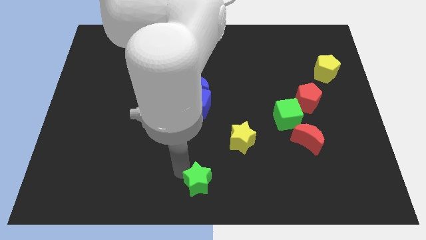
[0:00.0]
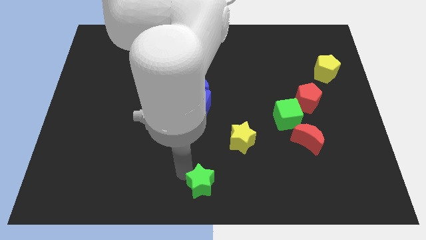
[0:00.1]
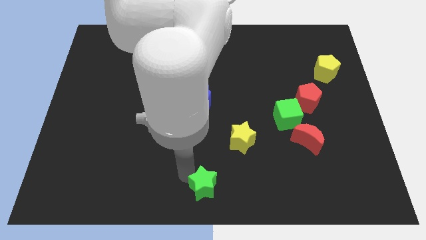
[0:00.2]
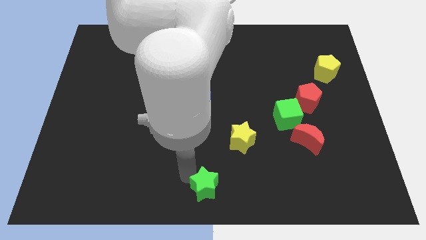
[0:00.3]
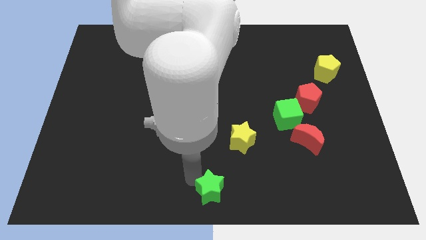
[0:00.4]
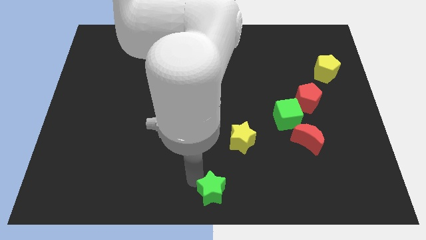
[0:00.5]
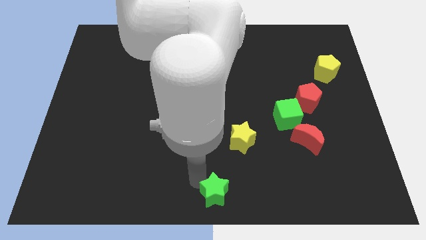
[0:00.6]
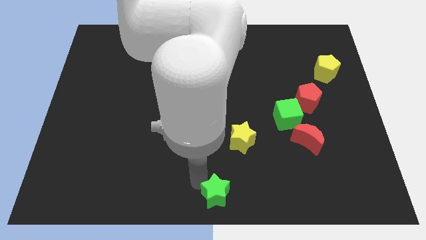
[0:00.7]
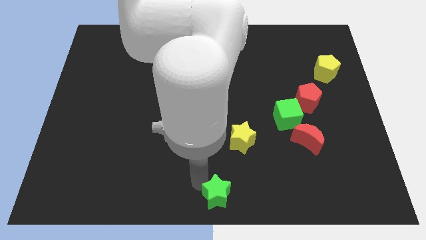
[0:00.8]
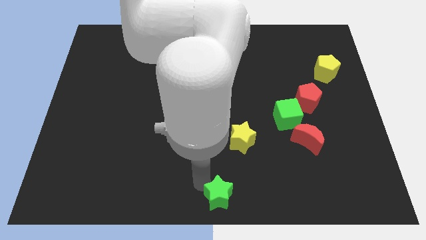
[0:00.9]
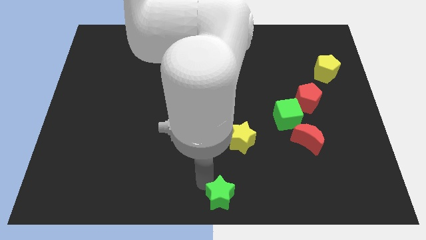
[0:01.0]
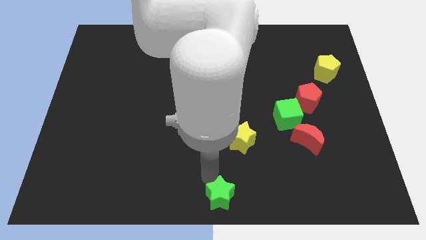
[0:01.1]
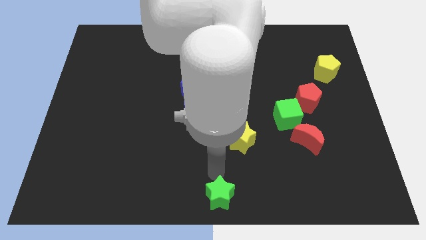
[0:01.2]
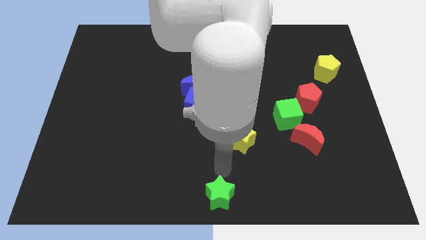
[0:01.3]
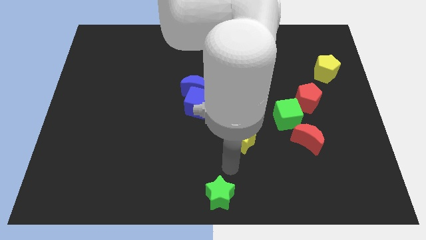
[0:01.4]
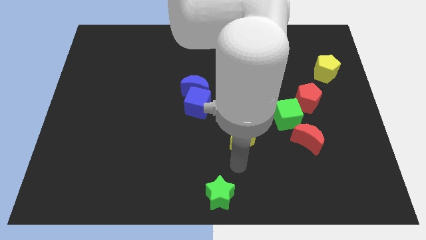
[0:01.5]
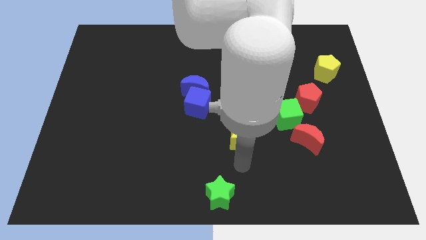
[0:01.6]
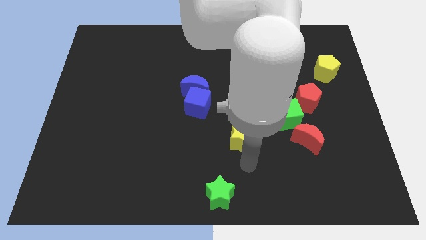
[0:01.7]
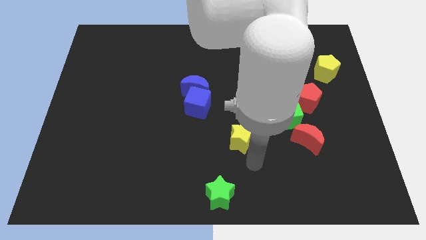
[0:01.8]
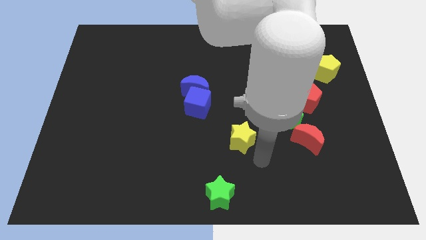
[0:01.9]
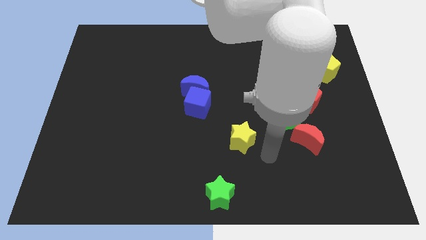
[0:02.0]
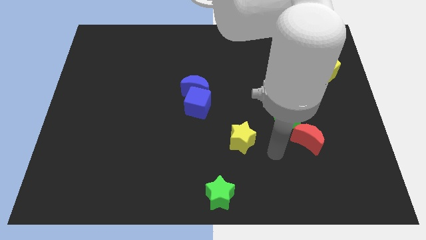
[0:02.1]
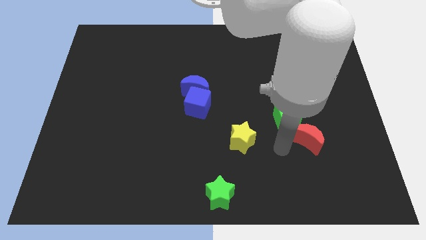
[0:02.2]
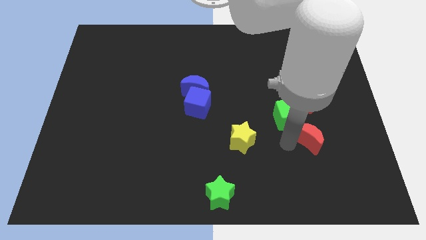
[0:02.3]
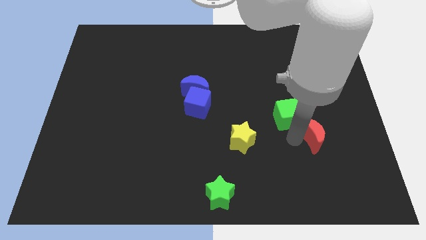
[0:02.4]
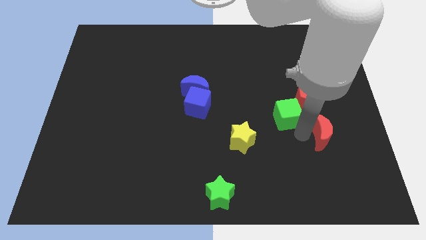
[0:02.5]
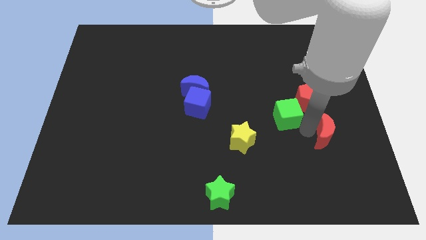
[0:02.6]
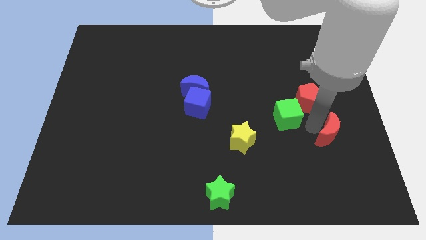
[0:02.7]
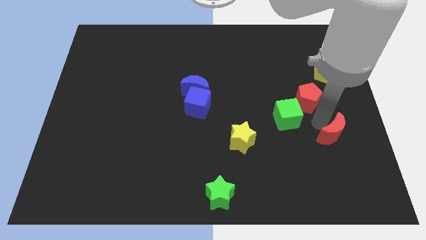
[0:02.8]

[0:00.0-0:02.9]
move your arm near the red moon

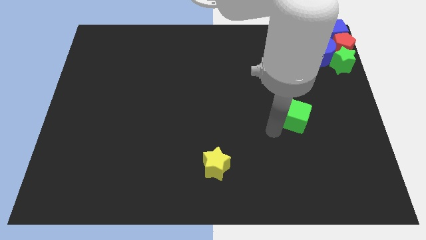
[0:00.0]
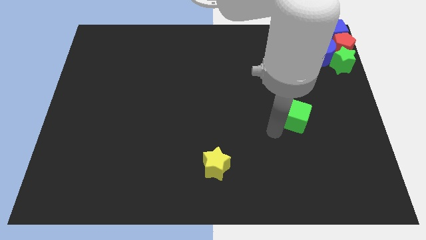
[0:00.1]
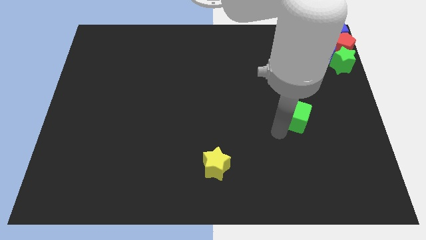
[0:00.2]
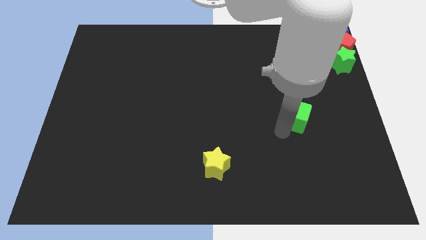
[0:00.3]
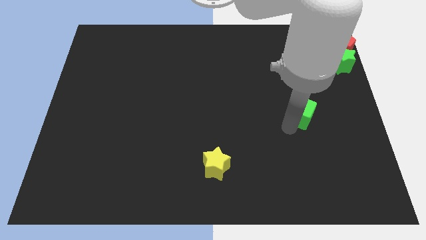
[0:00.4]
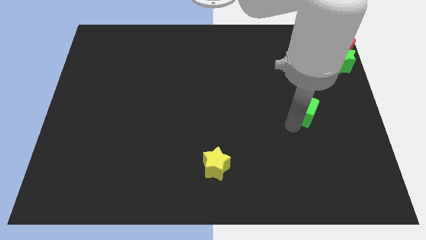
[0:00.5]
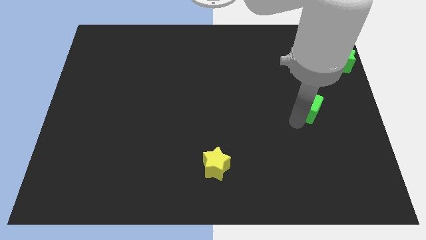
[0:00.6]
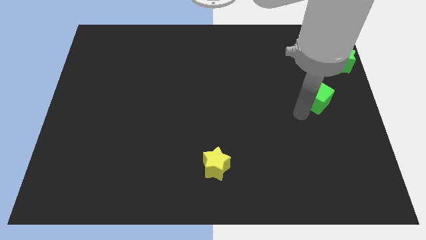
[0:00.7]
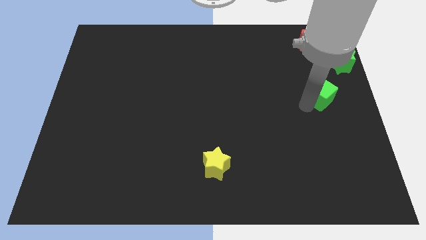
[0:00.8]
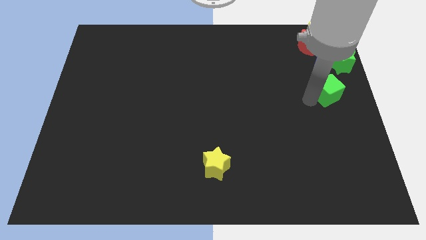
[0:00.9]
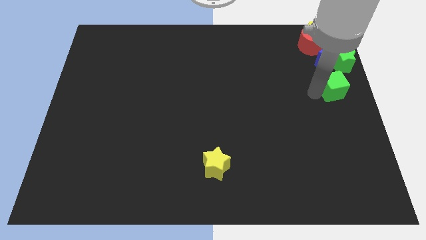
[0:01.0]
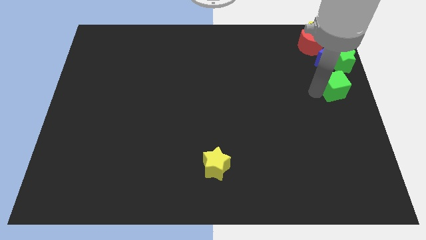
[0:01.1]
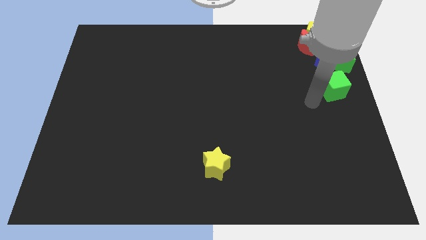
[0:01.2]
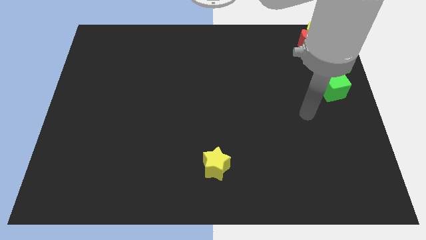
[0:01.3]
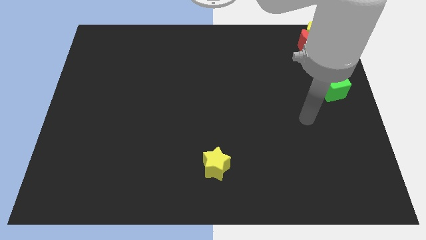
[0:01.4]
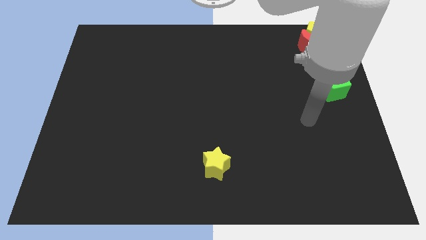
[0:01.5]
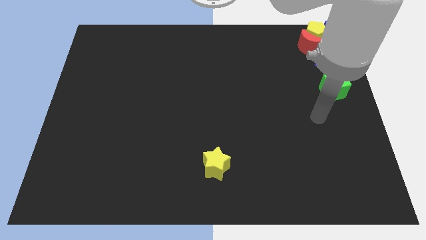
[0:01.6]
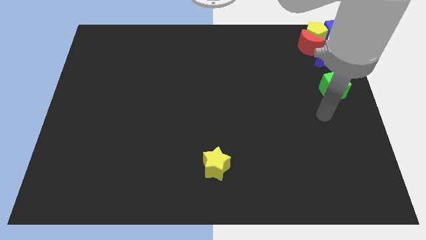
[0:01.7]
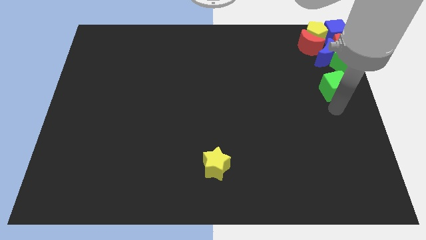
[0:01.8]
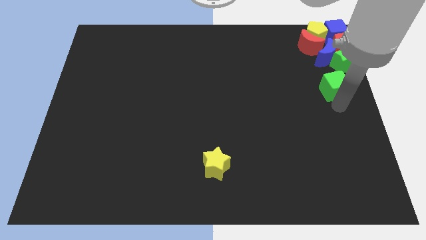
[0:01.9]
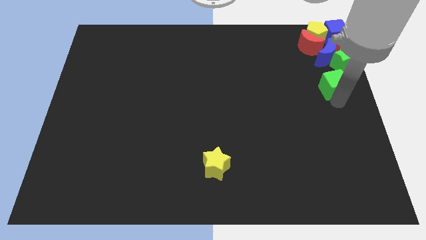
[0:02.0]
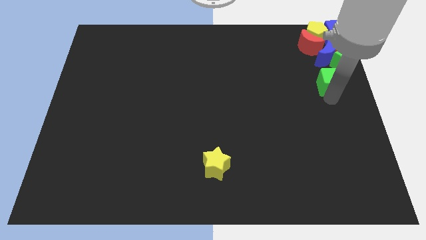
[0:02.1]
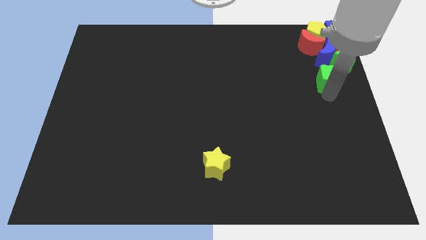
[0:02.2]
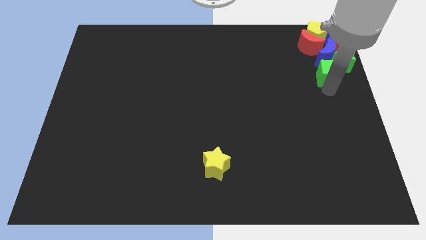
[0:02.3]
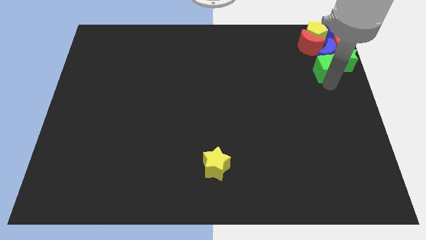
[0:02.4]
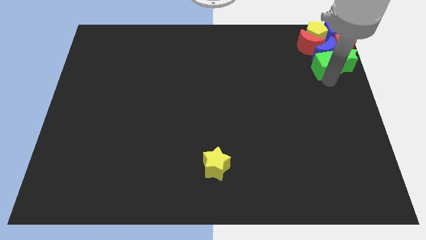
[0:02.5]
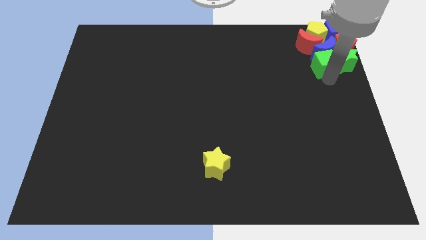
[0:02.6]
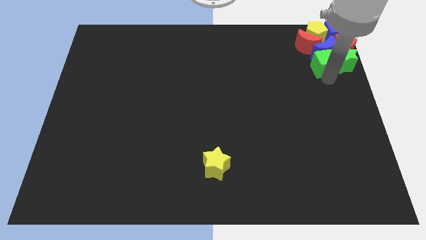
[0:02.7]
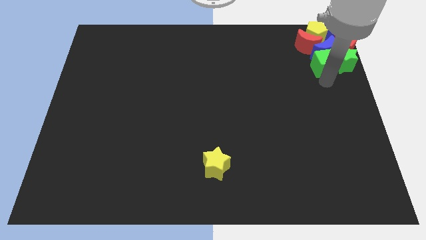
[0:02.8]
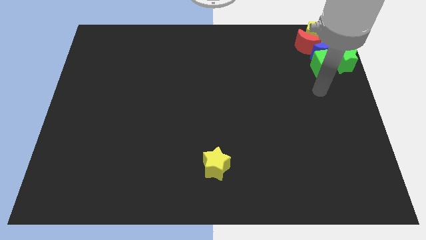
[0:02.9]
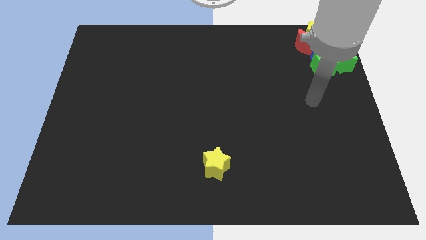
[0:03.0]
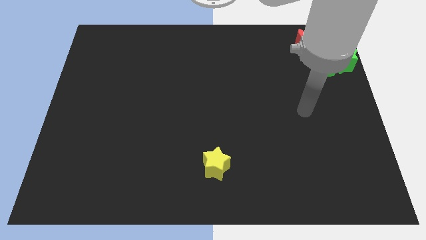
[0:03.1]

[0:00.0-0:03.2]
push the green cube into the green star

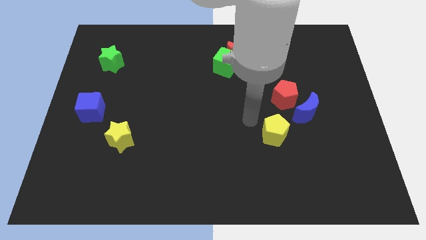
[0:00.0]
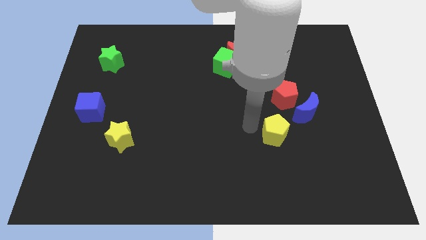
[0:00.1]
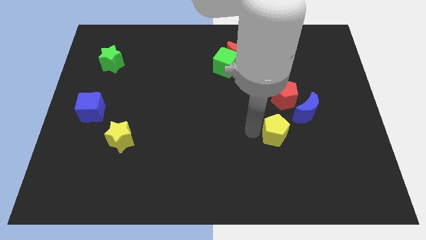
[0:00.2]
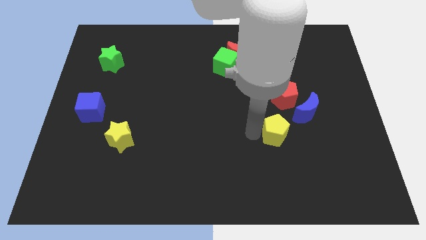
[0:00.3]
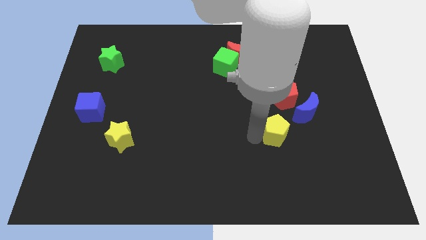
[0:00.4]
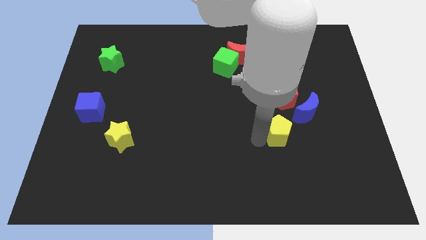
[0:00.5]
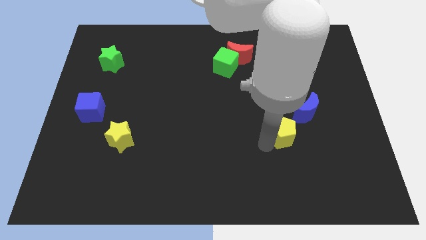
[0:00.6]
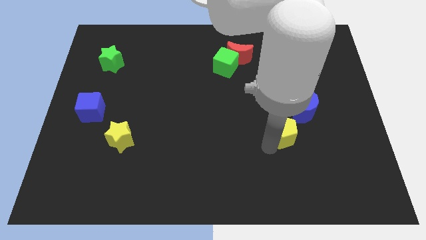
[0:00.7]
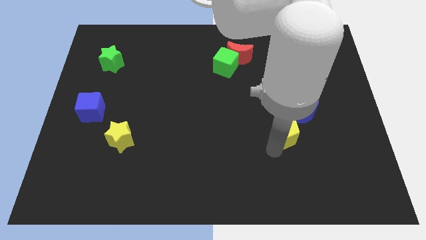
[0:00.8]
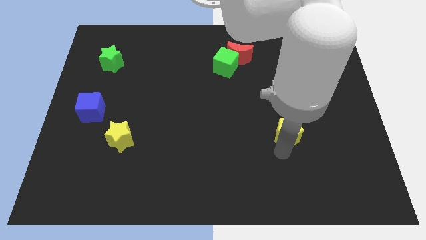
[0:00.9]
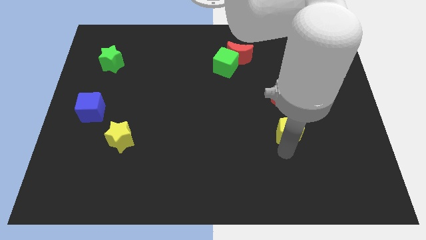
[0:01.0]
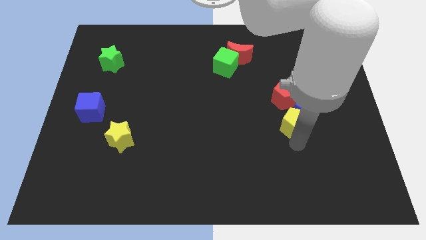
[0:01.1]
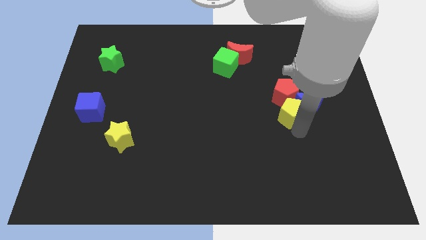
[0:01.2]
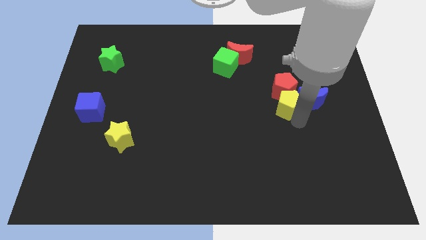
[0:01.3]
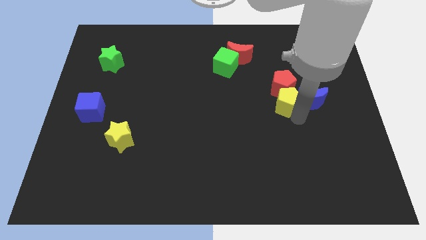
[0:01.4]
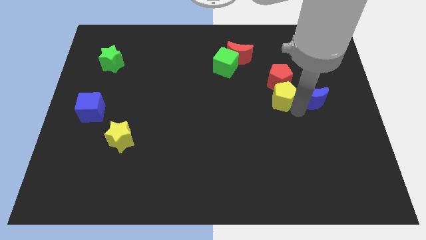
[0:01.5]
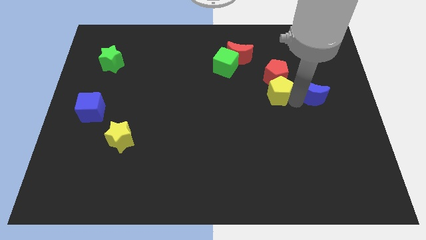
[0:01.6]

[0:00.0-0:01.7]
push the yellow pentagon into the red pentagon

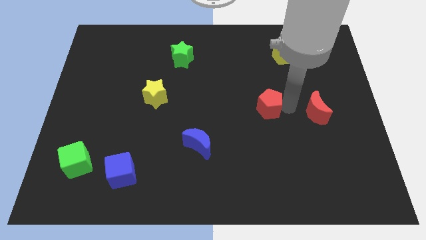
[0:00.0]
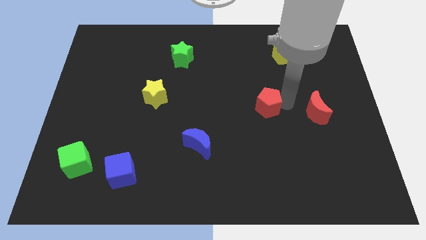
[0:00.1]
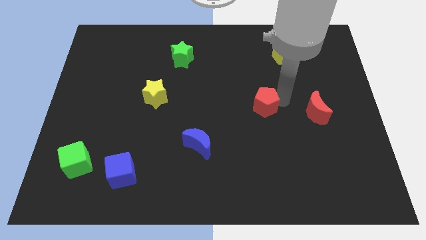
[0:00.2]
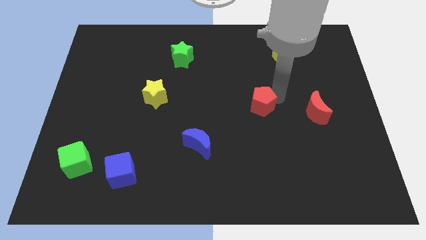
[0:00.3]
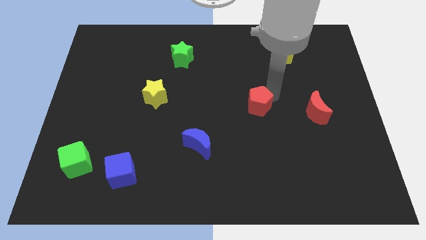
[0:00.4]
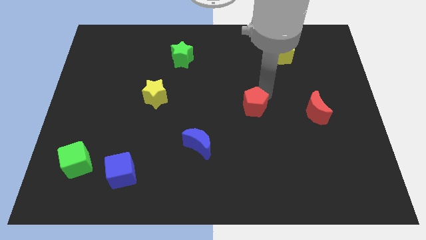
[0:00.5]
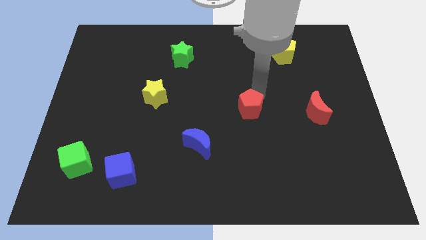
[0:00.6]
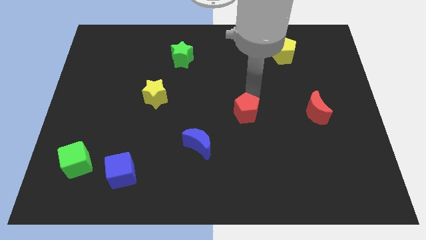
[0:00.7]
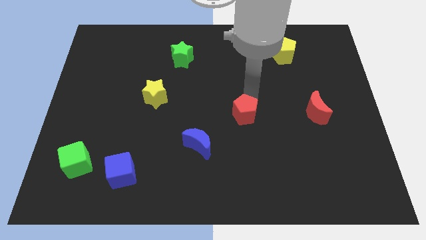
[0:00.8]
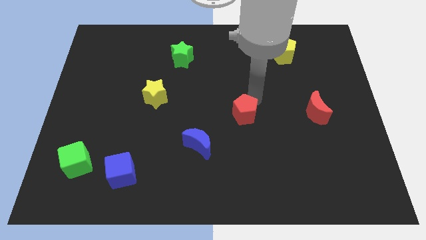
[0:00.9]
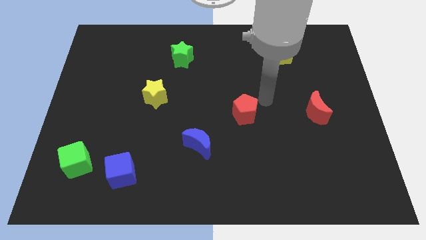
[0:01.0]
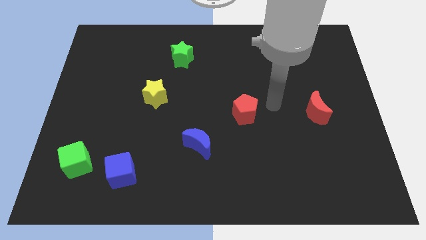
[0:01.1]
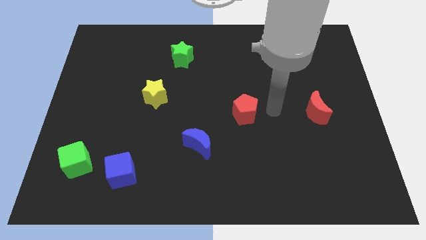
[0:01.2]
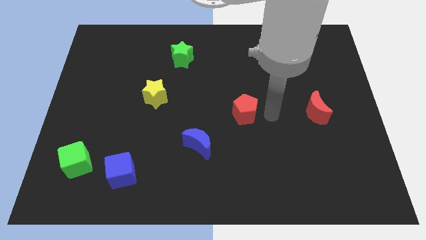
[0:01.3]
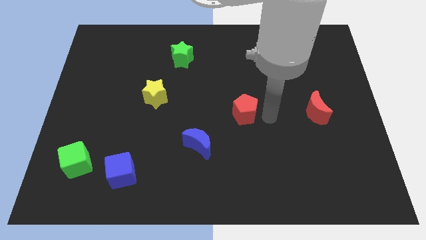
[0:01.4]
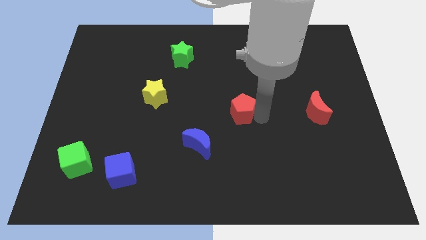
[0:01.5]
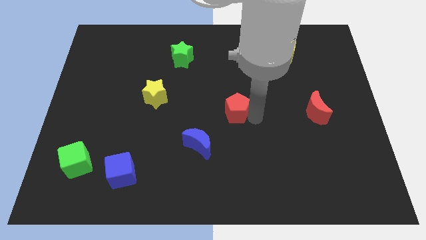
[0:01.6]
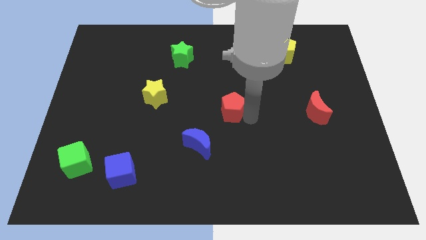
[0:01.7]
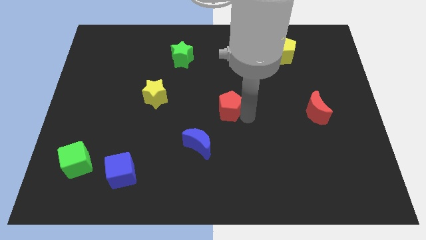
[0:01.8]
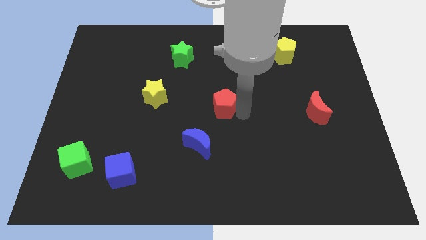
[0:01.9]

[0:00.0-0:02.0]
push the red pentagon to the top right of the blue crescent
